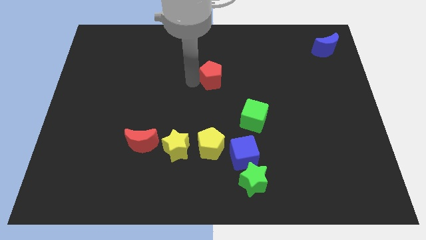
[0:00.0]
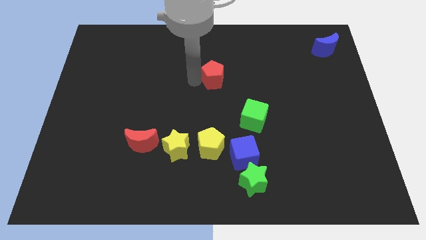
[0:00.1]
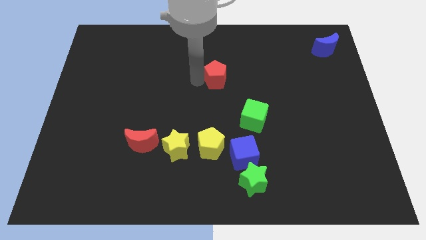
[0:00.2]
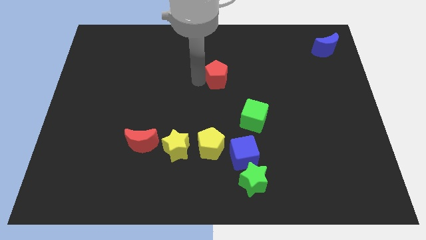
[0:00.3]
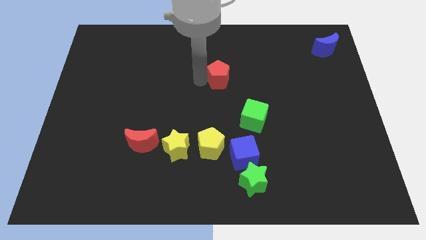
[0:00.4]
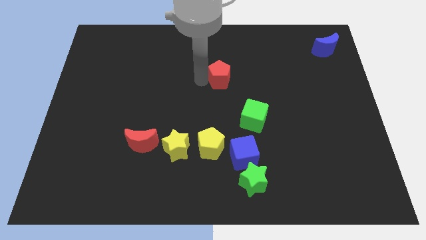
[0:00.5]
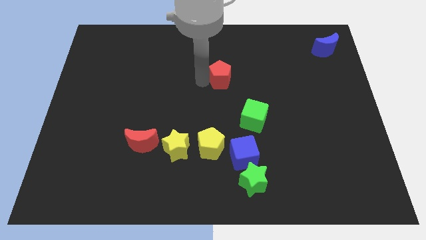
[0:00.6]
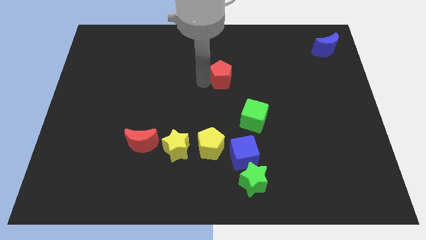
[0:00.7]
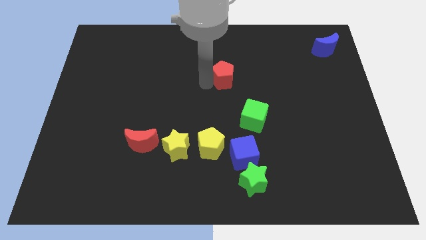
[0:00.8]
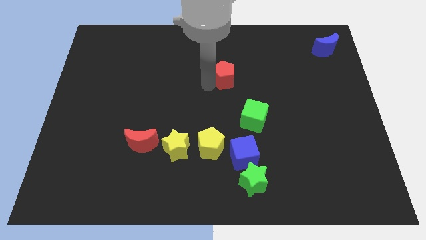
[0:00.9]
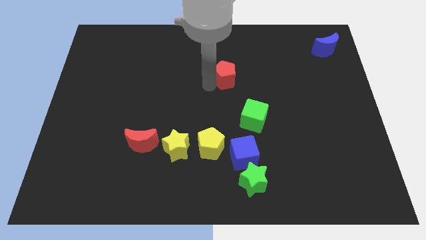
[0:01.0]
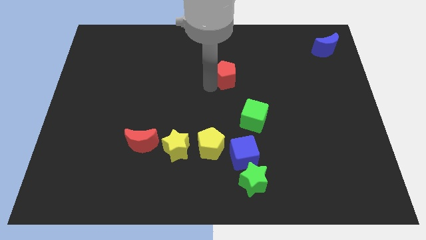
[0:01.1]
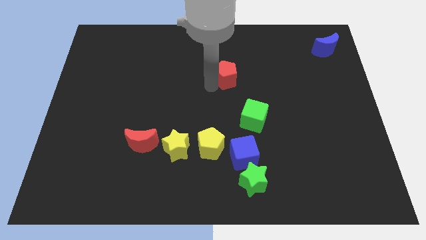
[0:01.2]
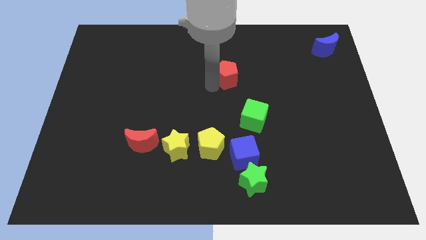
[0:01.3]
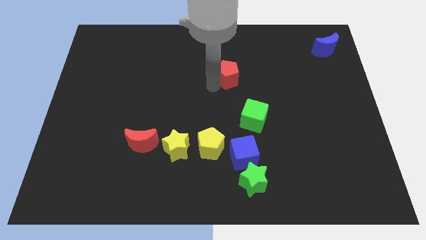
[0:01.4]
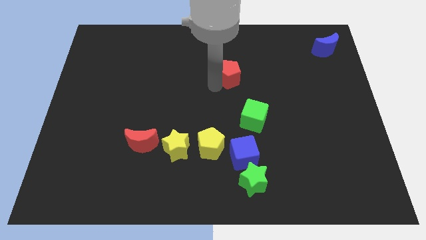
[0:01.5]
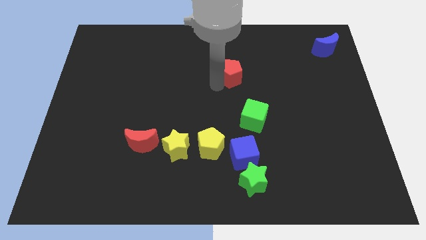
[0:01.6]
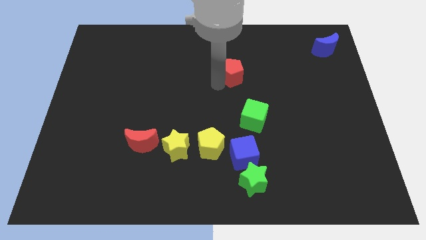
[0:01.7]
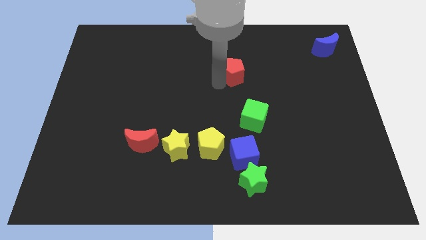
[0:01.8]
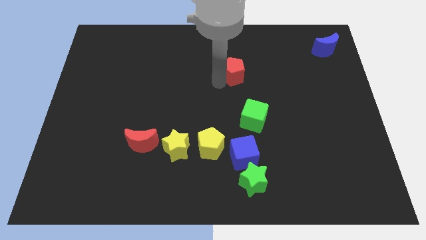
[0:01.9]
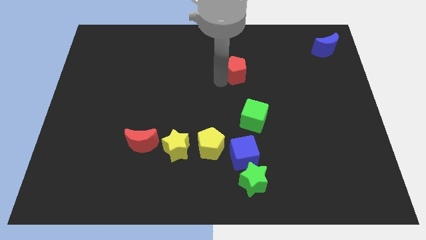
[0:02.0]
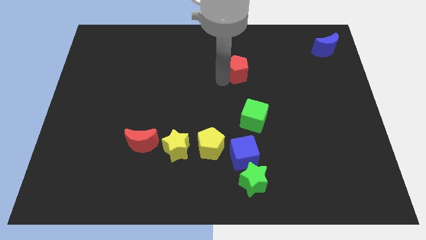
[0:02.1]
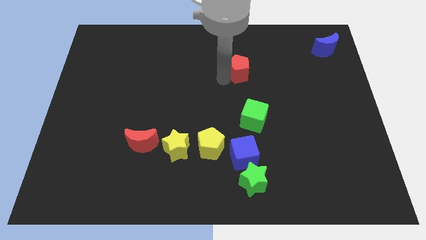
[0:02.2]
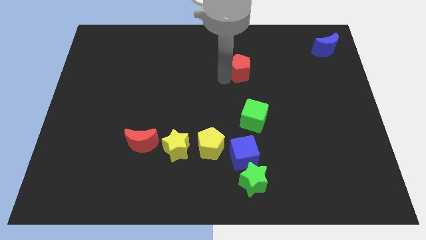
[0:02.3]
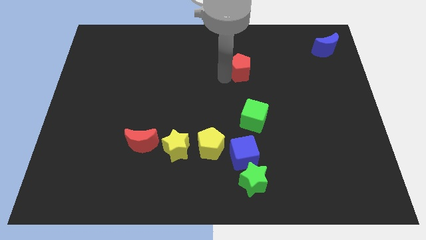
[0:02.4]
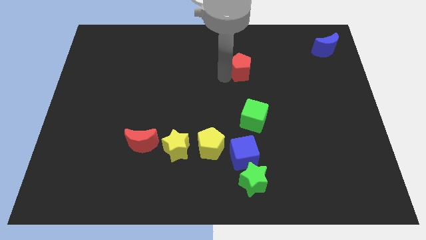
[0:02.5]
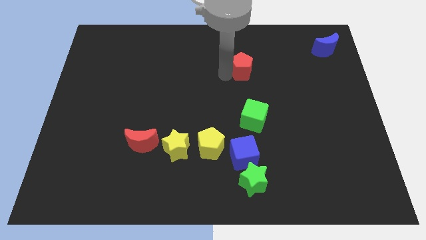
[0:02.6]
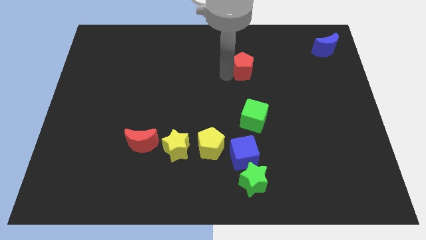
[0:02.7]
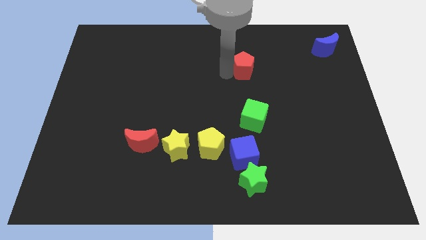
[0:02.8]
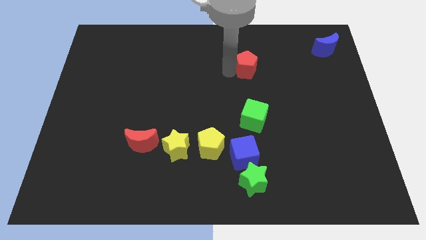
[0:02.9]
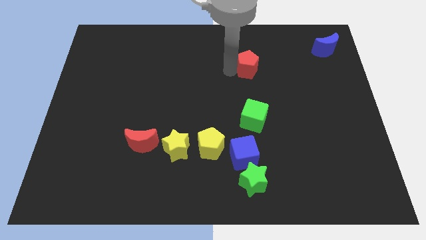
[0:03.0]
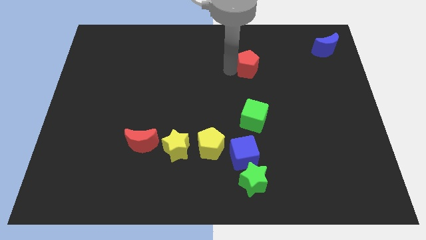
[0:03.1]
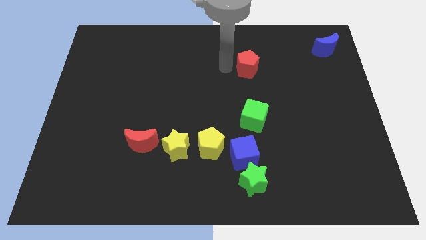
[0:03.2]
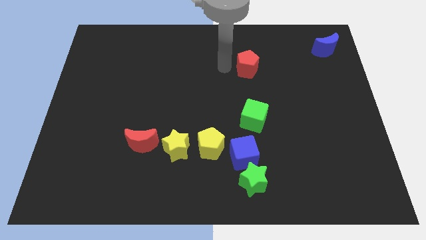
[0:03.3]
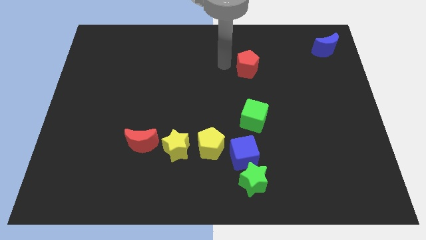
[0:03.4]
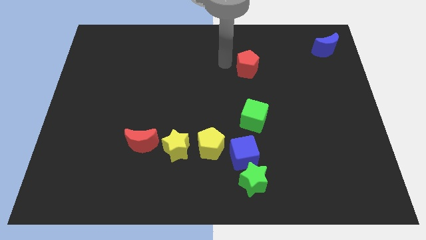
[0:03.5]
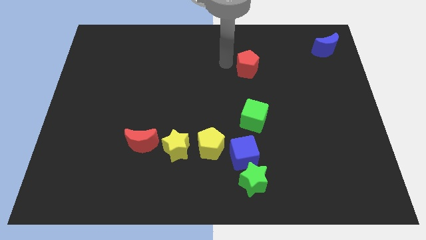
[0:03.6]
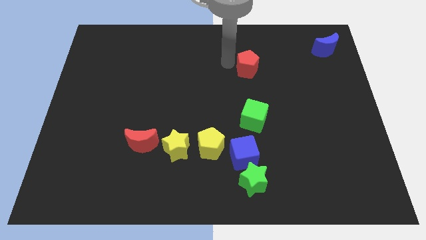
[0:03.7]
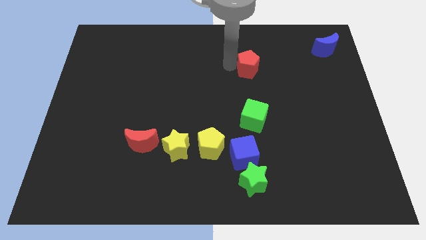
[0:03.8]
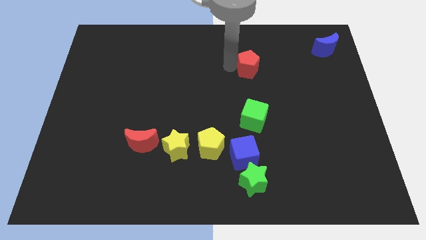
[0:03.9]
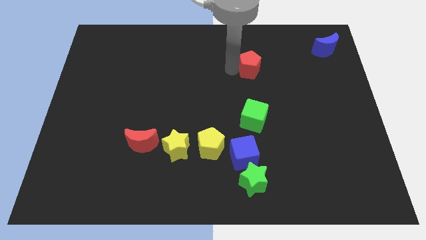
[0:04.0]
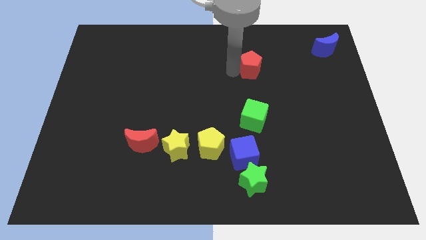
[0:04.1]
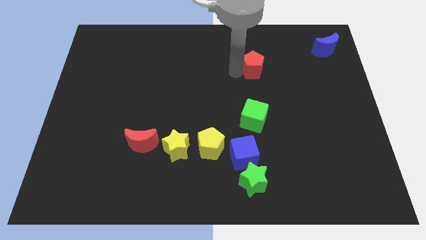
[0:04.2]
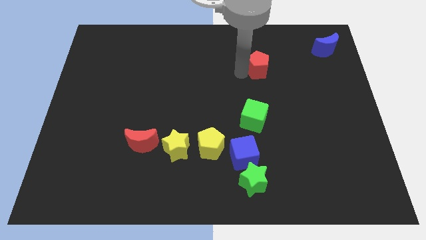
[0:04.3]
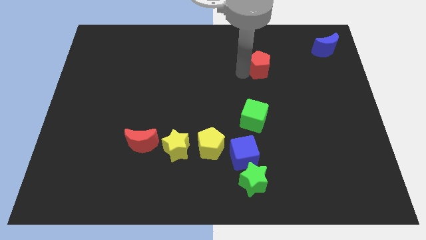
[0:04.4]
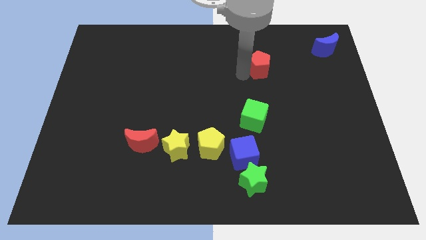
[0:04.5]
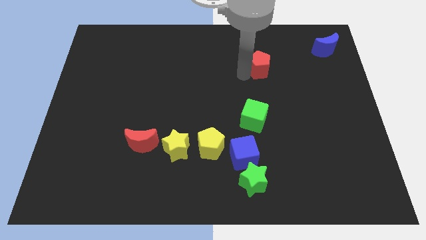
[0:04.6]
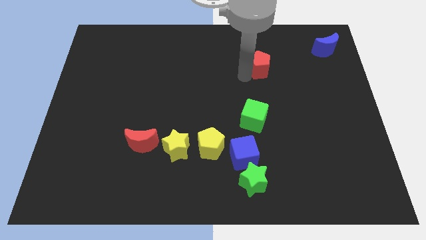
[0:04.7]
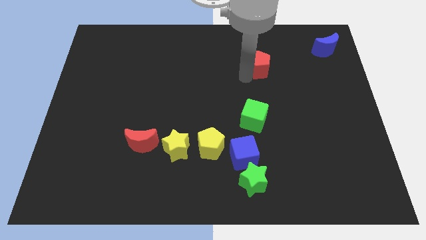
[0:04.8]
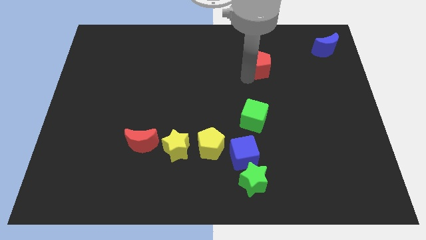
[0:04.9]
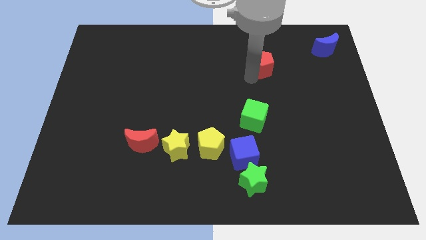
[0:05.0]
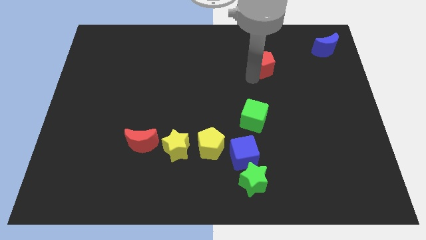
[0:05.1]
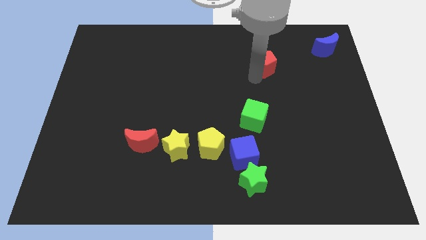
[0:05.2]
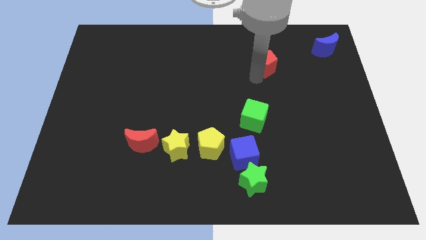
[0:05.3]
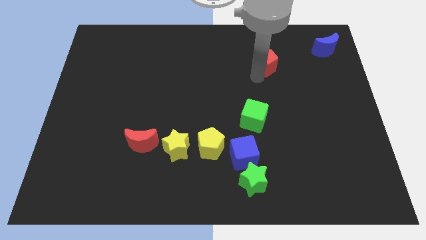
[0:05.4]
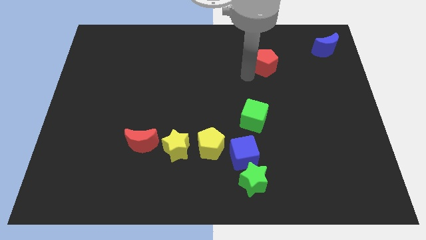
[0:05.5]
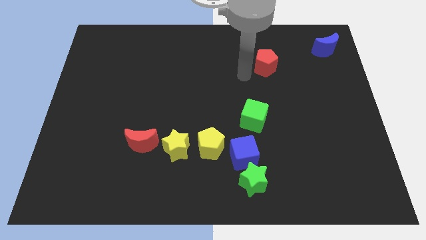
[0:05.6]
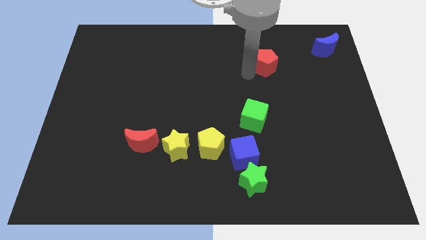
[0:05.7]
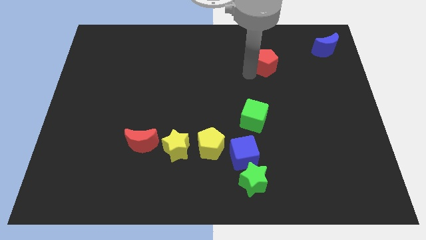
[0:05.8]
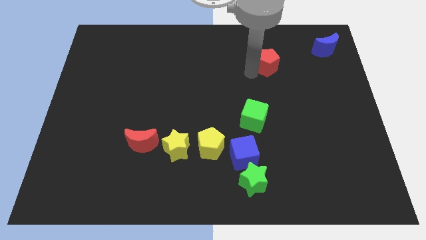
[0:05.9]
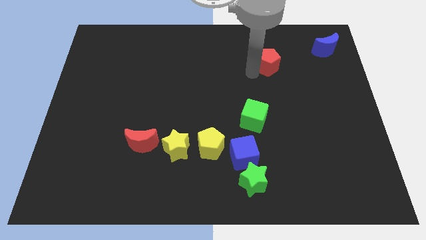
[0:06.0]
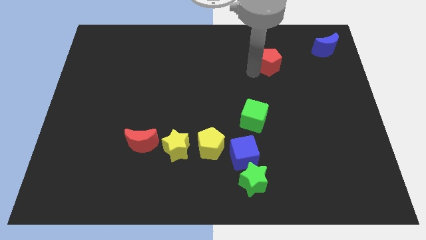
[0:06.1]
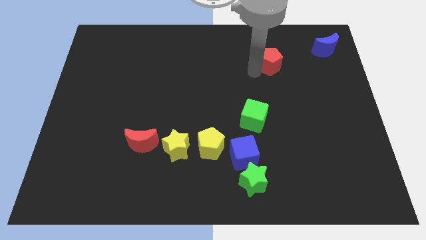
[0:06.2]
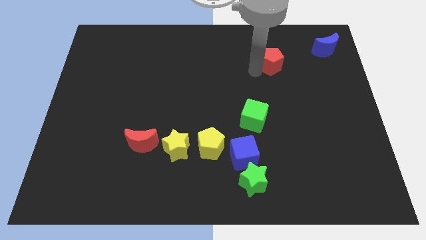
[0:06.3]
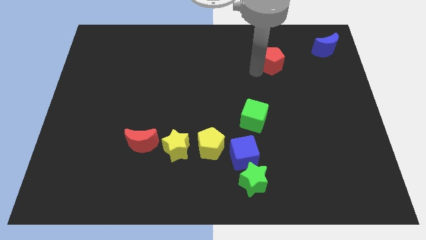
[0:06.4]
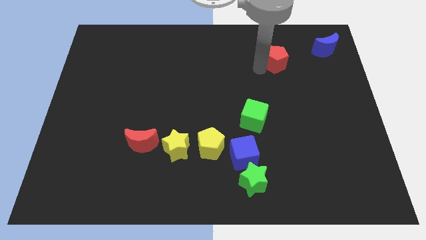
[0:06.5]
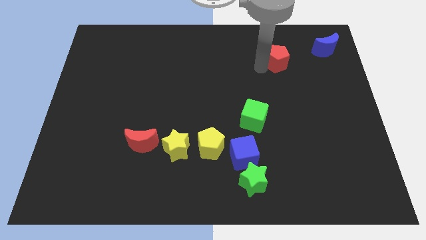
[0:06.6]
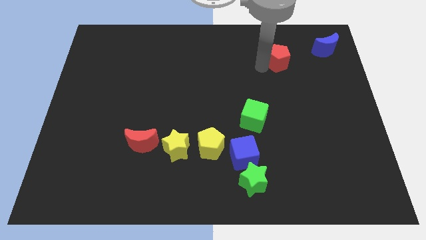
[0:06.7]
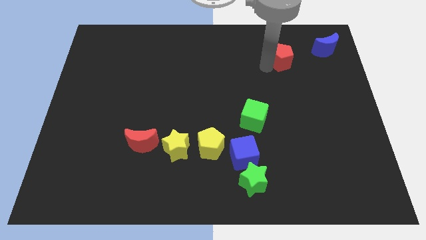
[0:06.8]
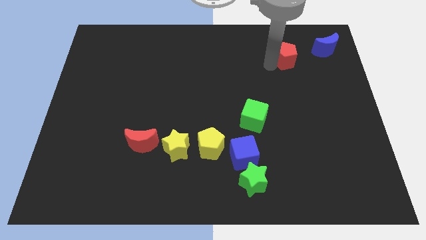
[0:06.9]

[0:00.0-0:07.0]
place the red pentagon to the left of the blue moon

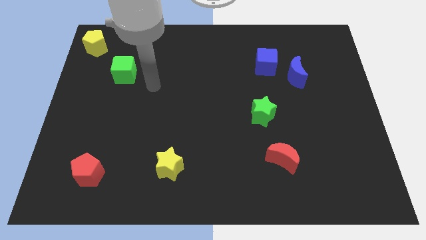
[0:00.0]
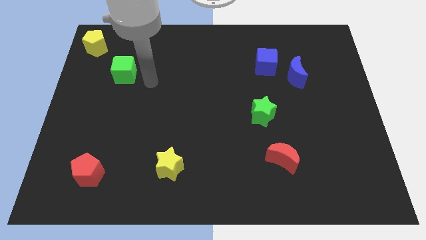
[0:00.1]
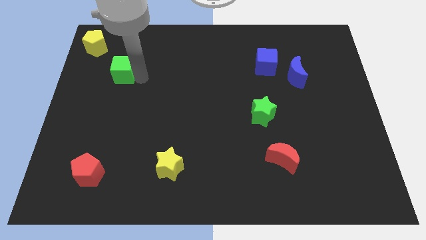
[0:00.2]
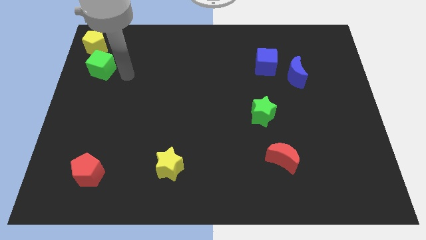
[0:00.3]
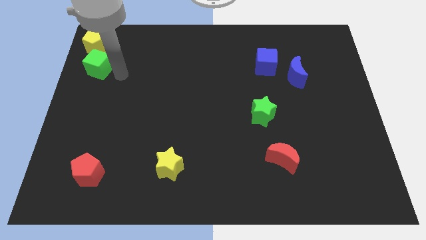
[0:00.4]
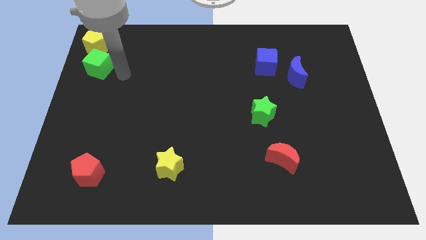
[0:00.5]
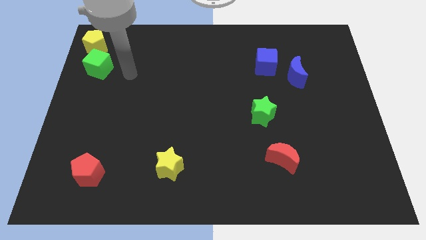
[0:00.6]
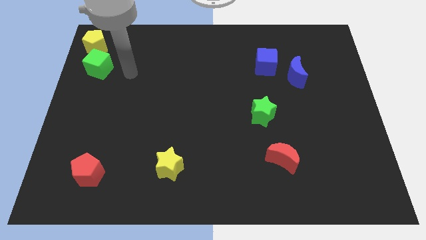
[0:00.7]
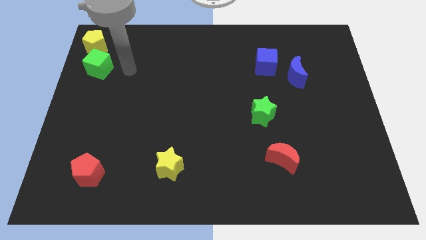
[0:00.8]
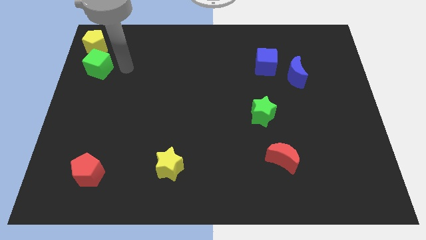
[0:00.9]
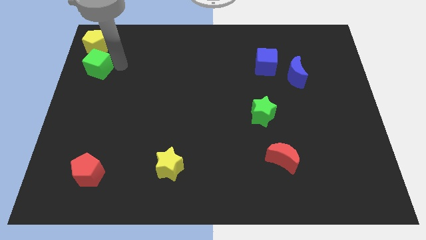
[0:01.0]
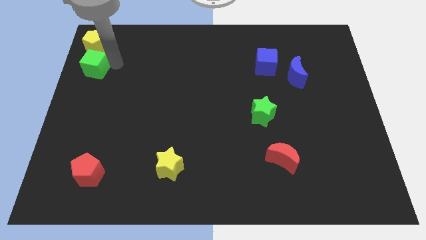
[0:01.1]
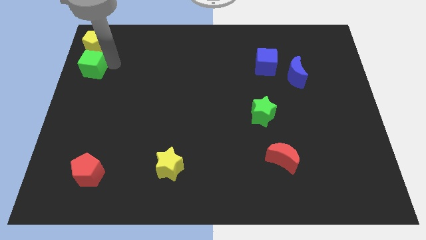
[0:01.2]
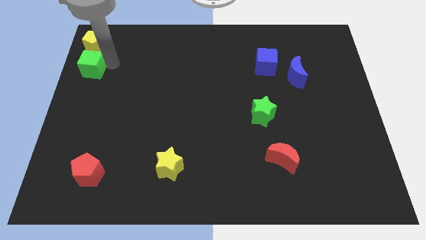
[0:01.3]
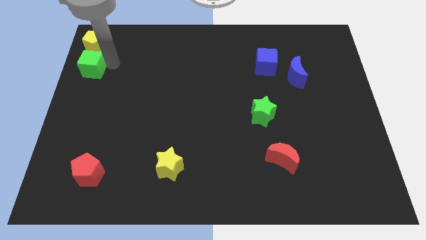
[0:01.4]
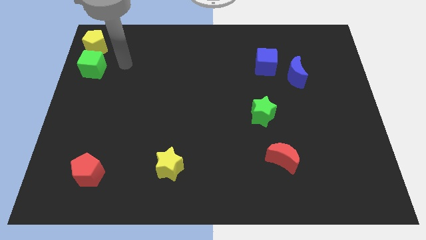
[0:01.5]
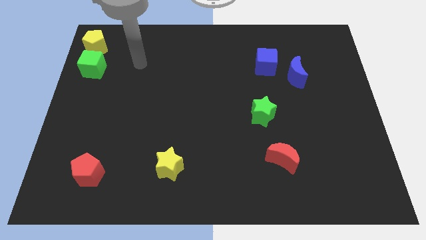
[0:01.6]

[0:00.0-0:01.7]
push the green cube towards the top left corner

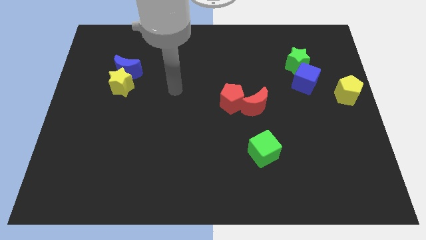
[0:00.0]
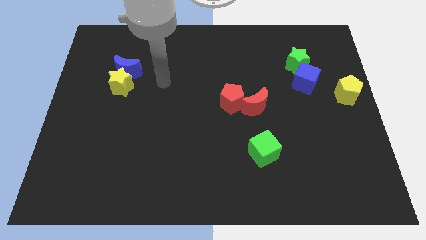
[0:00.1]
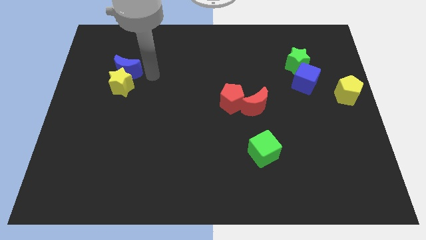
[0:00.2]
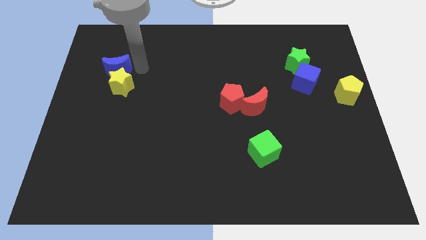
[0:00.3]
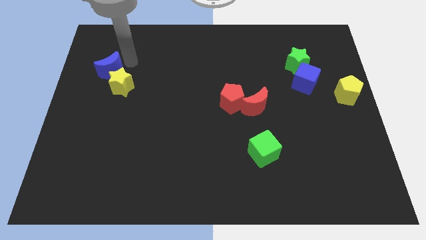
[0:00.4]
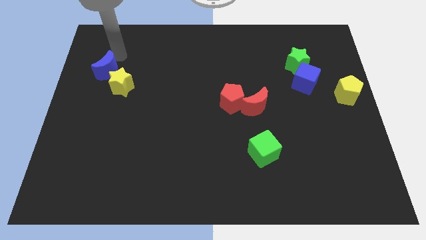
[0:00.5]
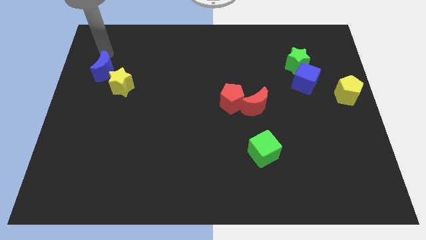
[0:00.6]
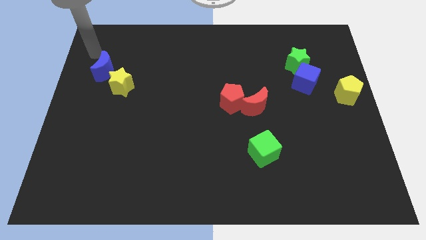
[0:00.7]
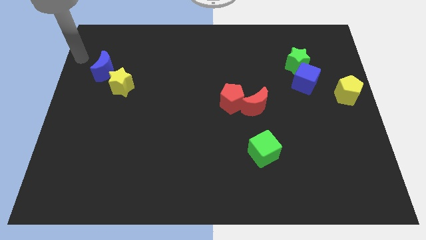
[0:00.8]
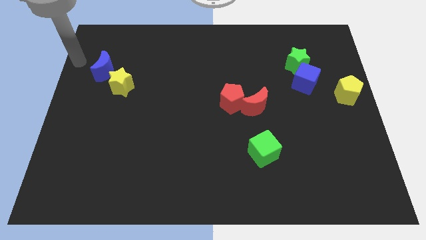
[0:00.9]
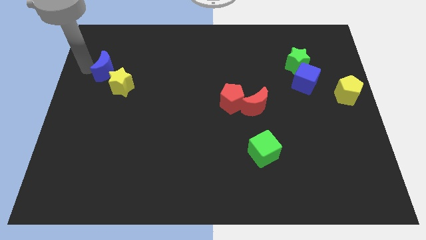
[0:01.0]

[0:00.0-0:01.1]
push the blue moon slightly towards left
